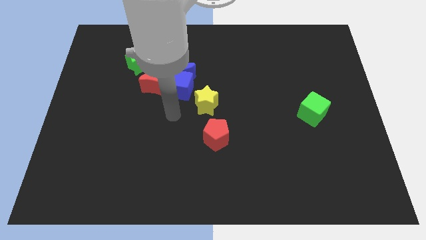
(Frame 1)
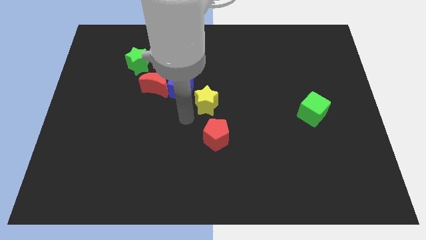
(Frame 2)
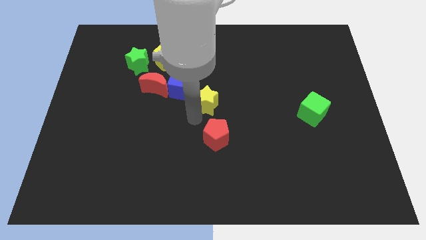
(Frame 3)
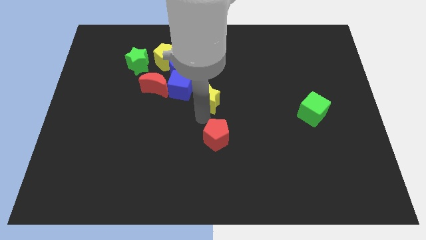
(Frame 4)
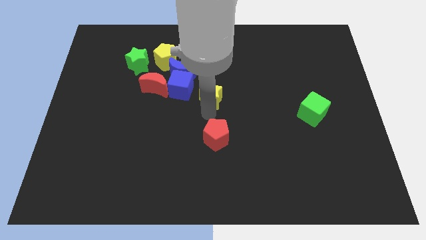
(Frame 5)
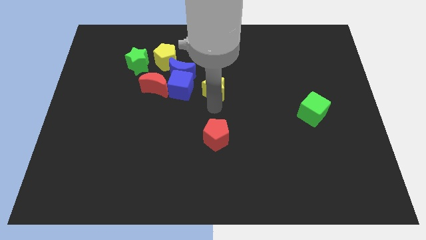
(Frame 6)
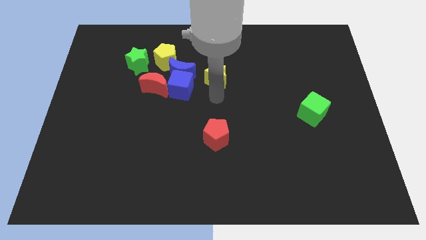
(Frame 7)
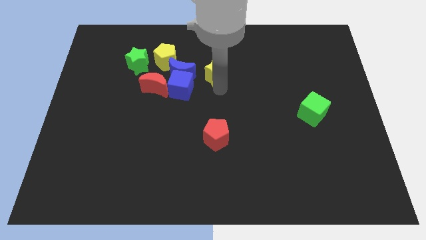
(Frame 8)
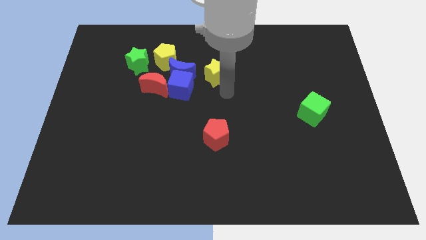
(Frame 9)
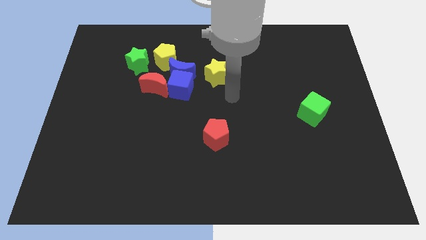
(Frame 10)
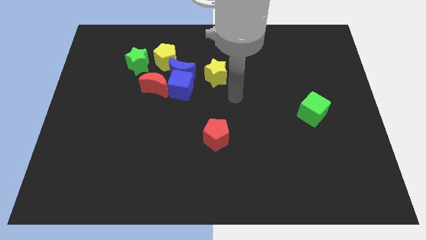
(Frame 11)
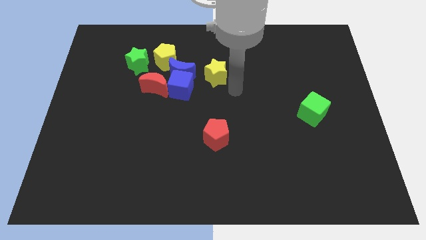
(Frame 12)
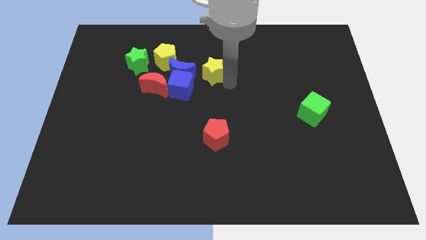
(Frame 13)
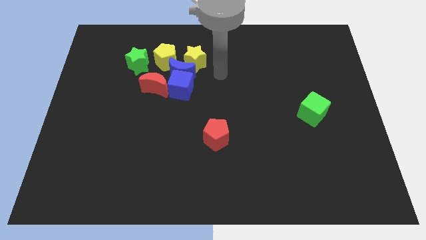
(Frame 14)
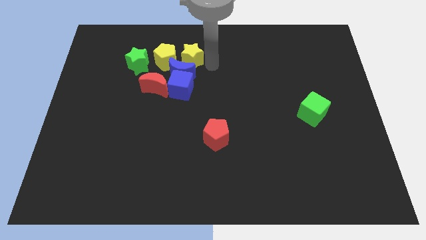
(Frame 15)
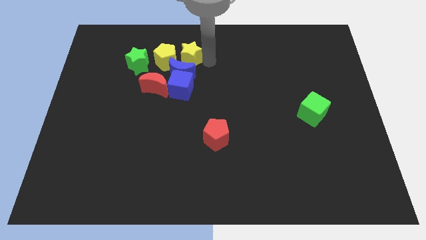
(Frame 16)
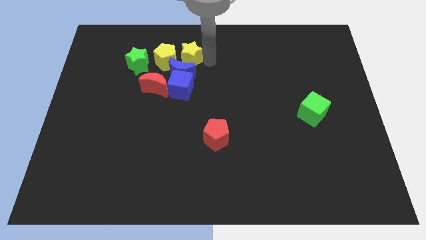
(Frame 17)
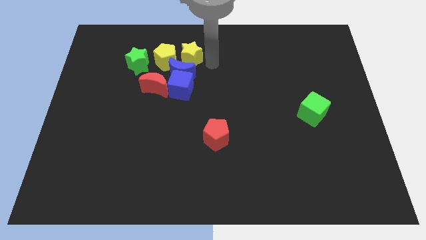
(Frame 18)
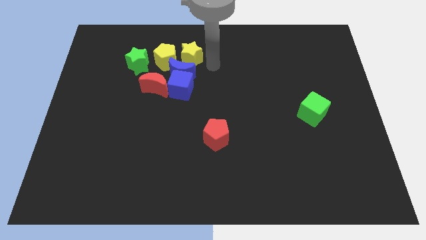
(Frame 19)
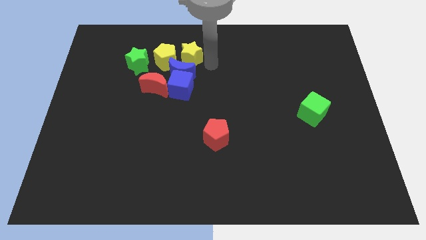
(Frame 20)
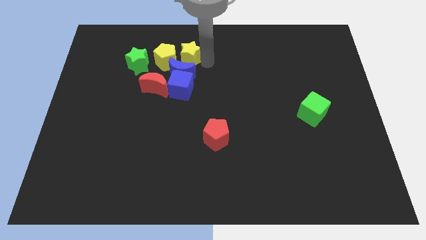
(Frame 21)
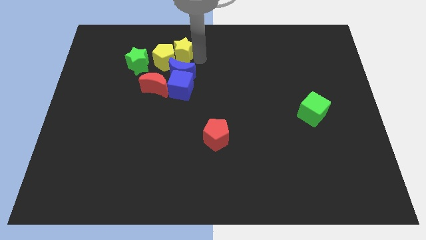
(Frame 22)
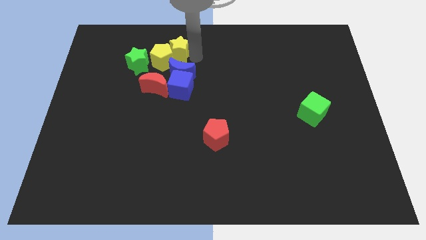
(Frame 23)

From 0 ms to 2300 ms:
move the yellow star right side of the yellow pentagon

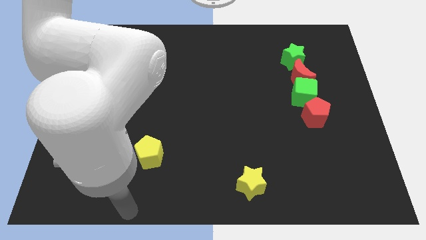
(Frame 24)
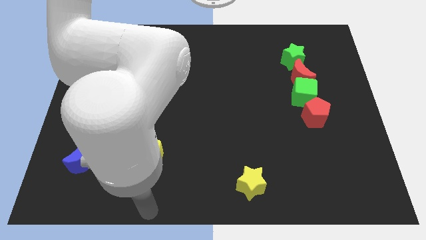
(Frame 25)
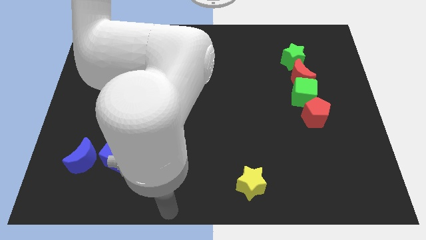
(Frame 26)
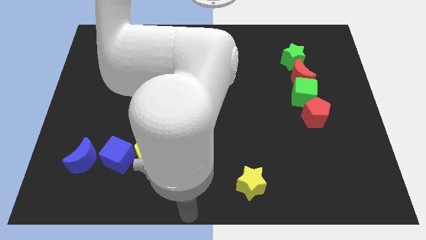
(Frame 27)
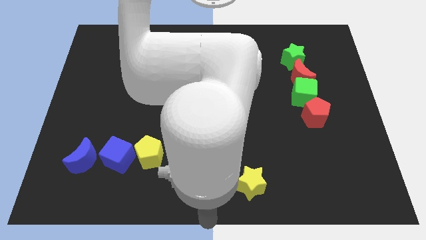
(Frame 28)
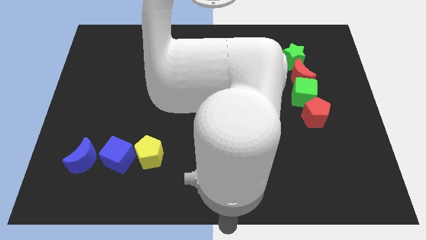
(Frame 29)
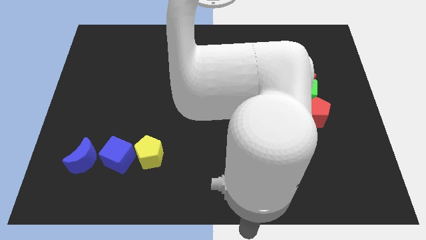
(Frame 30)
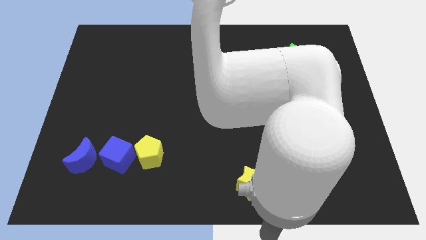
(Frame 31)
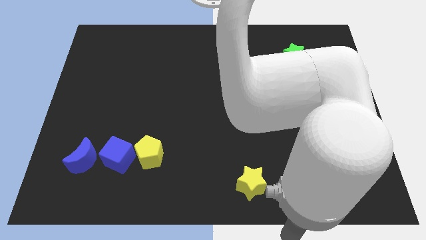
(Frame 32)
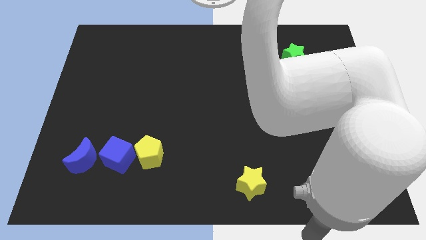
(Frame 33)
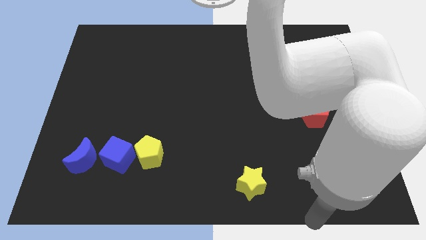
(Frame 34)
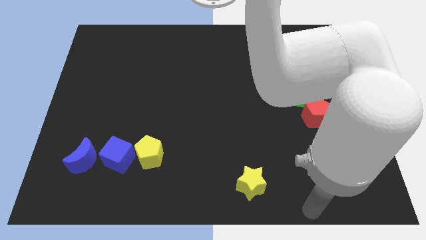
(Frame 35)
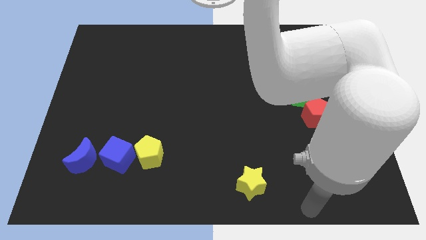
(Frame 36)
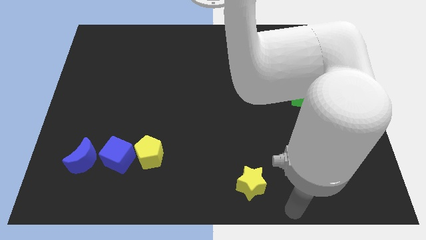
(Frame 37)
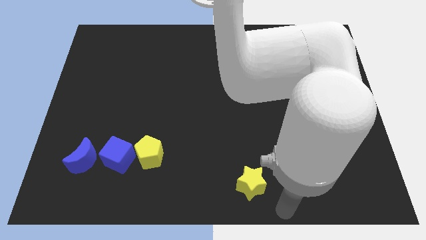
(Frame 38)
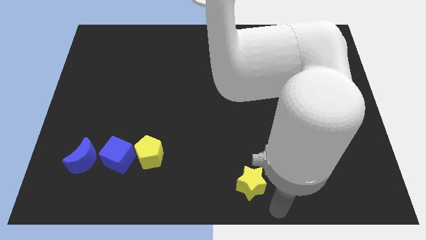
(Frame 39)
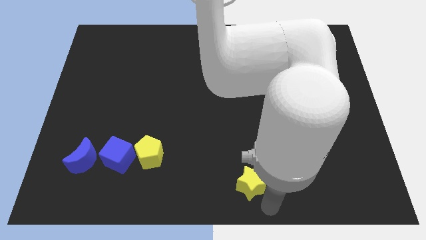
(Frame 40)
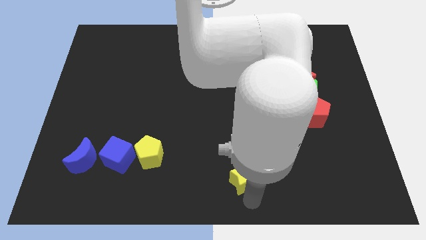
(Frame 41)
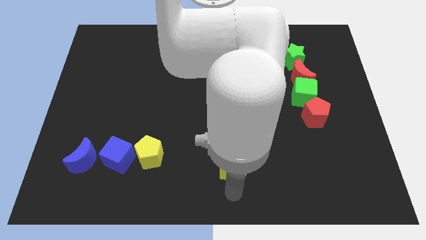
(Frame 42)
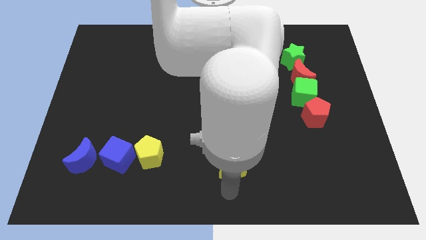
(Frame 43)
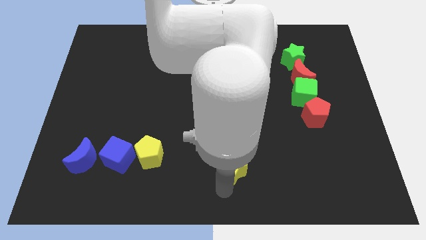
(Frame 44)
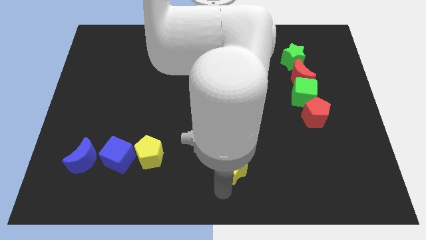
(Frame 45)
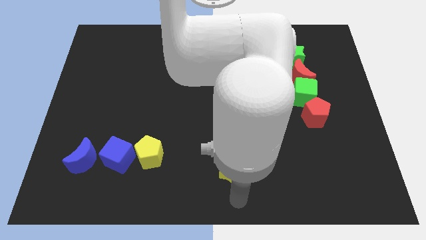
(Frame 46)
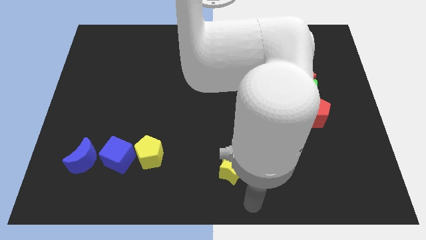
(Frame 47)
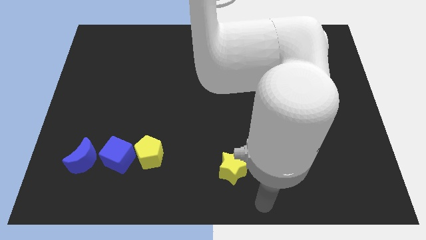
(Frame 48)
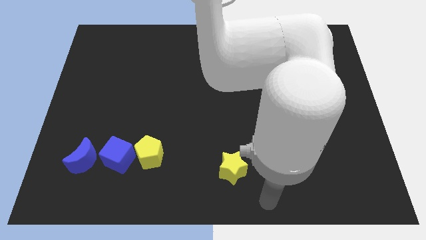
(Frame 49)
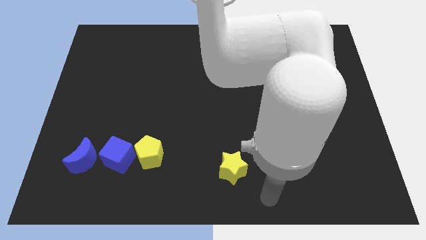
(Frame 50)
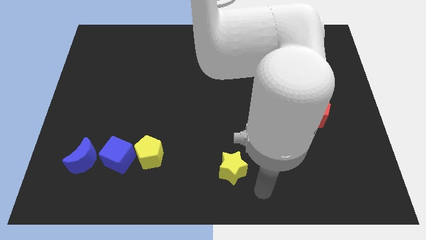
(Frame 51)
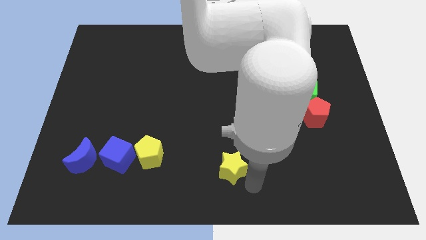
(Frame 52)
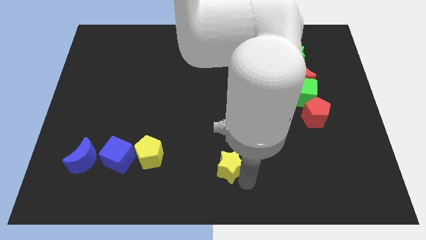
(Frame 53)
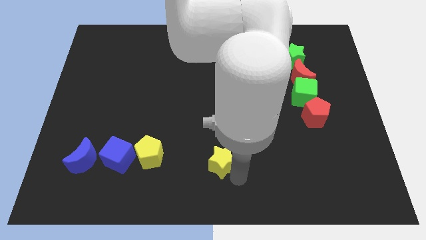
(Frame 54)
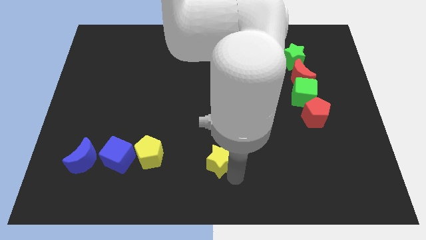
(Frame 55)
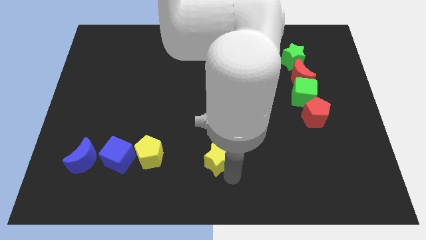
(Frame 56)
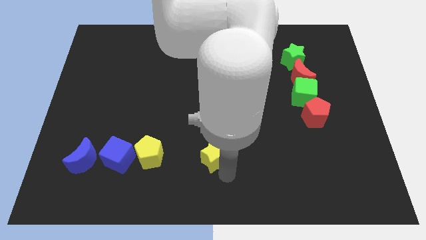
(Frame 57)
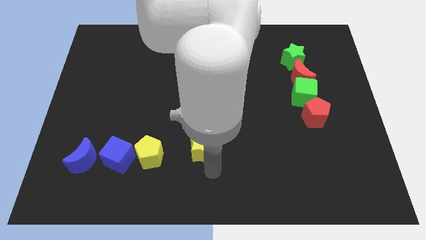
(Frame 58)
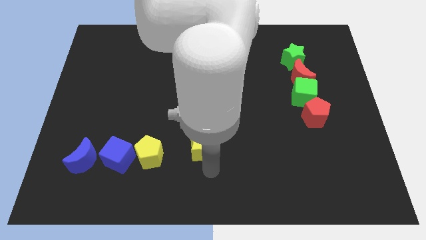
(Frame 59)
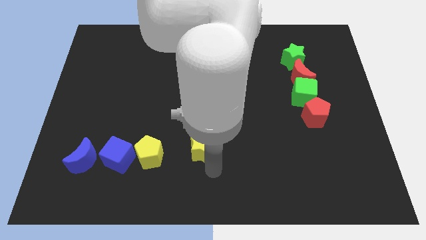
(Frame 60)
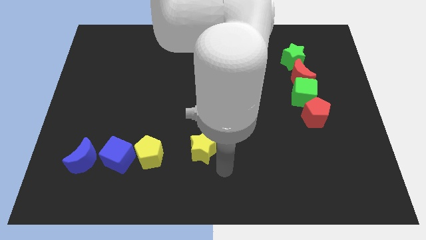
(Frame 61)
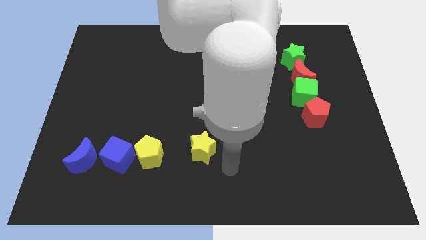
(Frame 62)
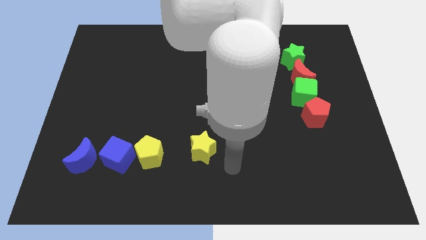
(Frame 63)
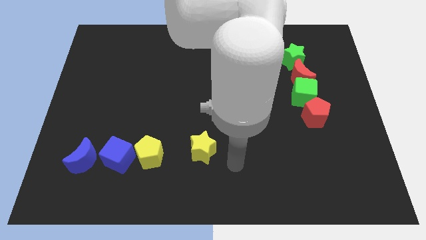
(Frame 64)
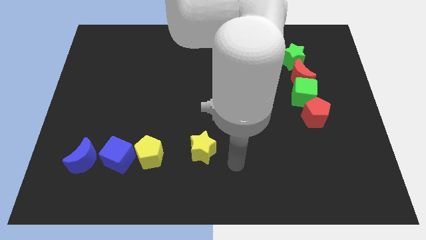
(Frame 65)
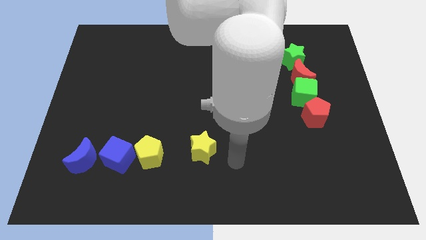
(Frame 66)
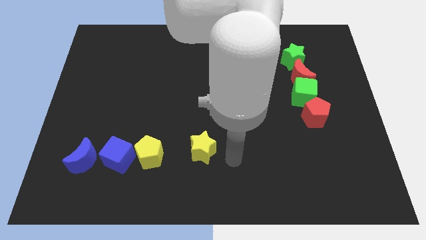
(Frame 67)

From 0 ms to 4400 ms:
push the yellow star to the top of the board

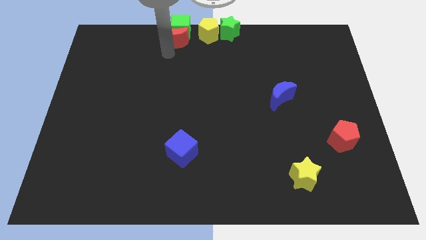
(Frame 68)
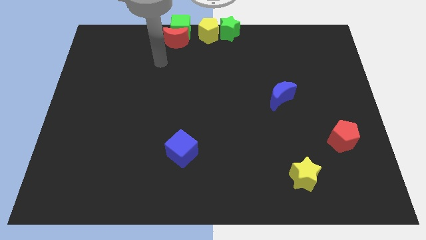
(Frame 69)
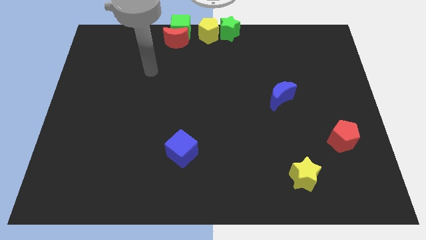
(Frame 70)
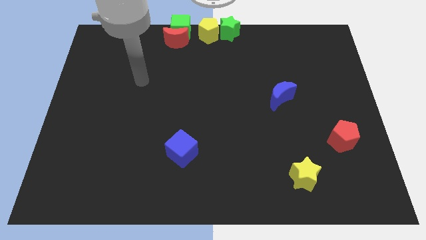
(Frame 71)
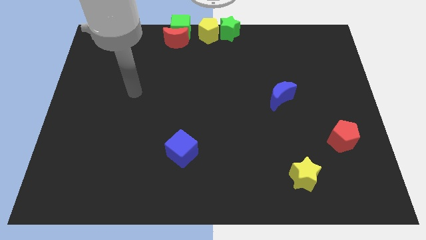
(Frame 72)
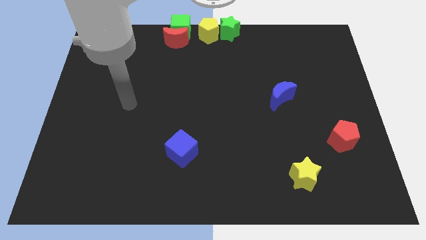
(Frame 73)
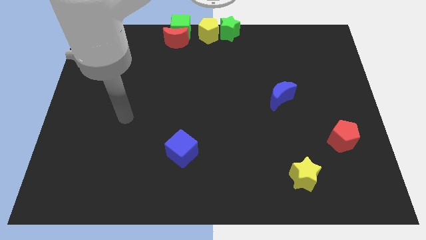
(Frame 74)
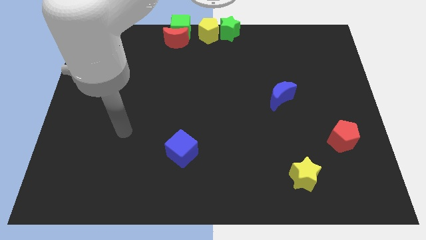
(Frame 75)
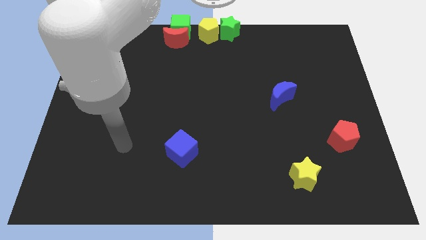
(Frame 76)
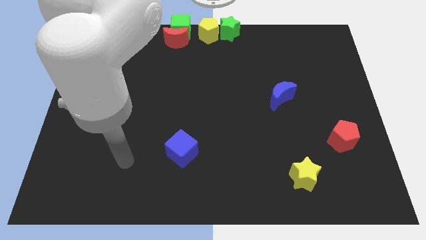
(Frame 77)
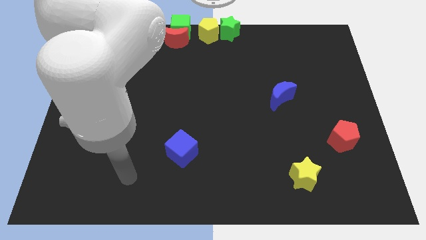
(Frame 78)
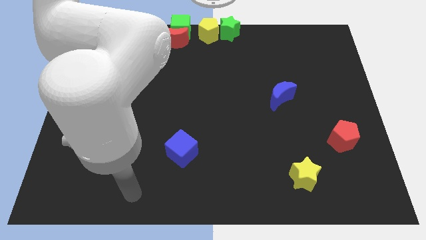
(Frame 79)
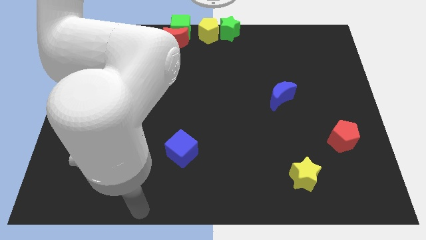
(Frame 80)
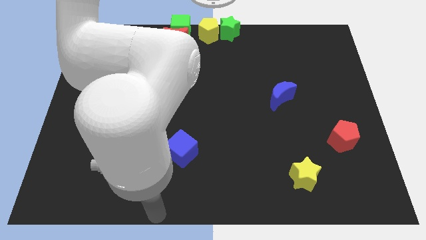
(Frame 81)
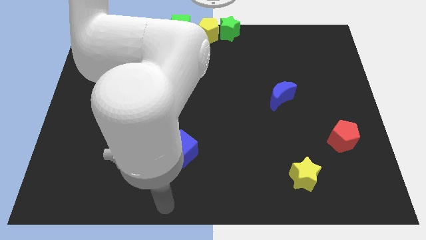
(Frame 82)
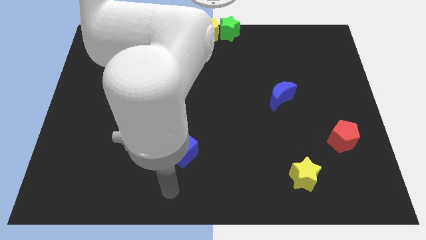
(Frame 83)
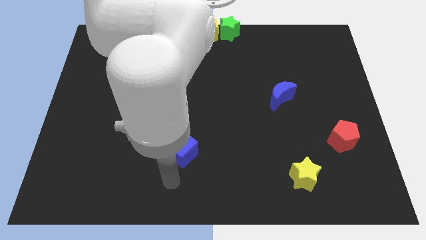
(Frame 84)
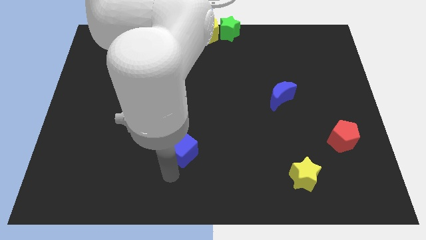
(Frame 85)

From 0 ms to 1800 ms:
point your arm blue cube

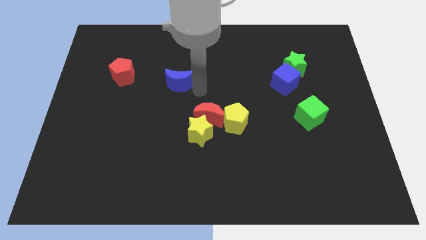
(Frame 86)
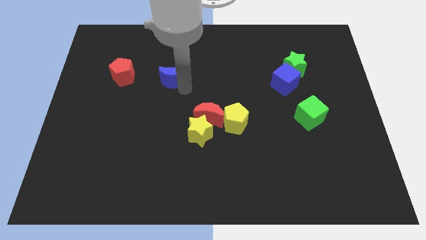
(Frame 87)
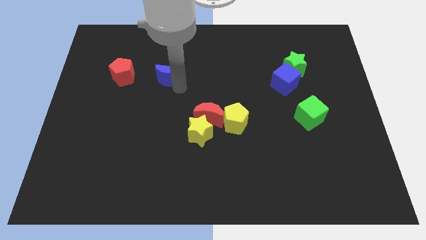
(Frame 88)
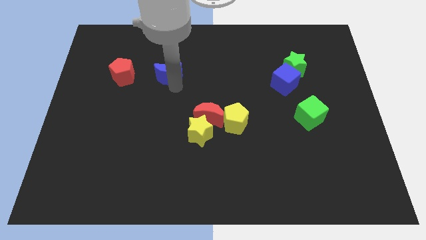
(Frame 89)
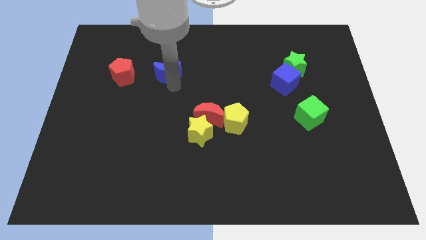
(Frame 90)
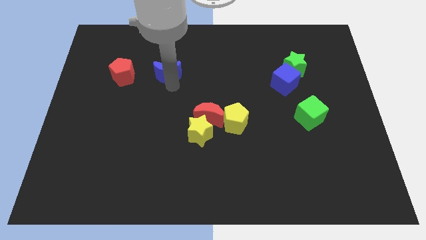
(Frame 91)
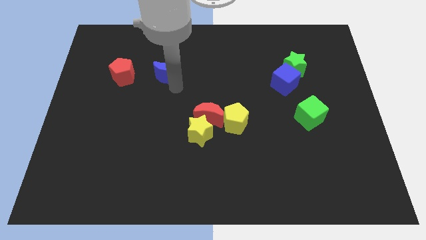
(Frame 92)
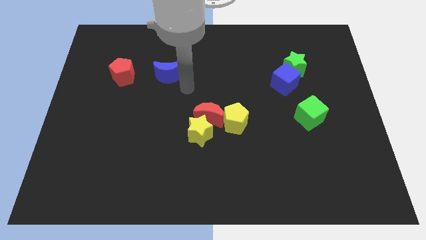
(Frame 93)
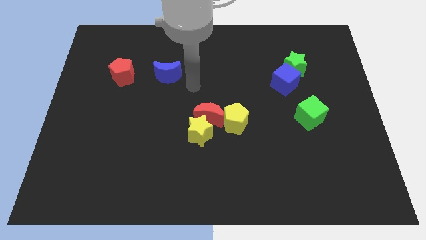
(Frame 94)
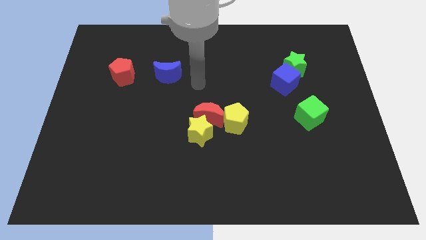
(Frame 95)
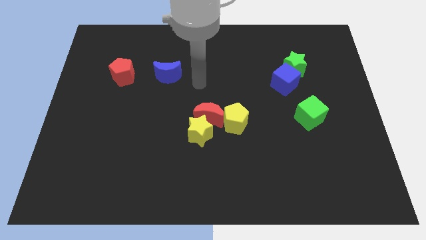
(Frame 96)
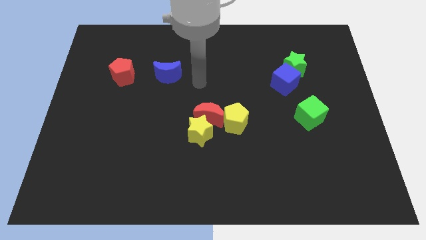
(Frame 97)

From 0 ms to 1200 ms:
place the blue moon to the right of the red pentagon
